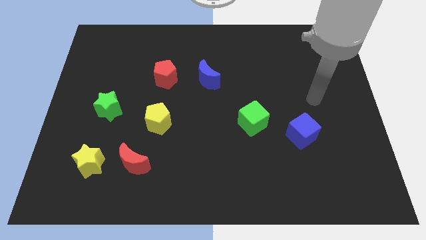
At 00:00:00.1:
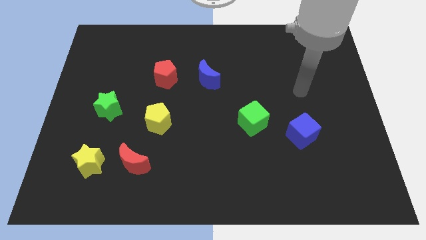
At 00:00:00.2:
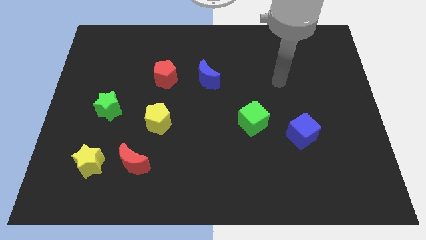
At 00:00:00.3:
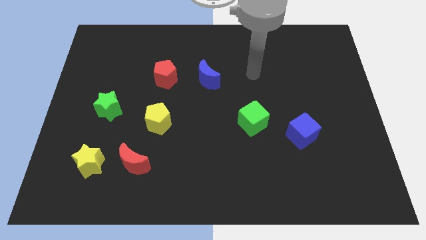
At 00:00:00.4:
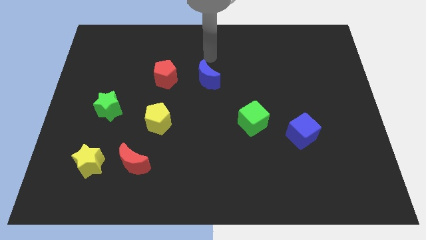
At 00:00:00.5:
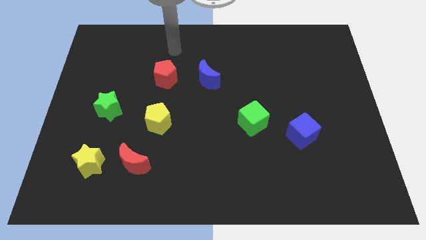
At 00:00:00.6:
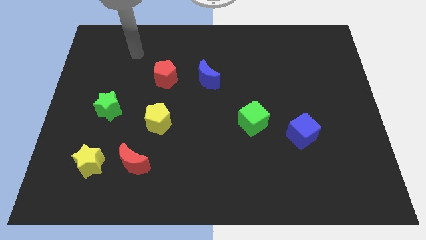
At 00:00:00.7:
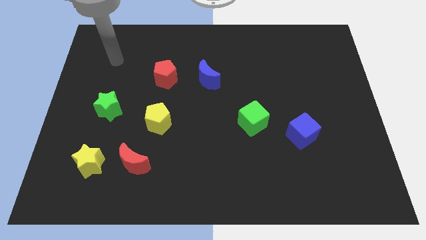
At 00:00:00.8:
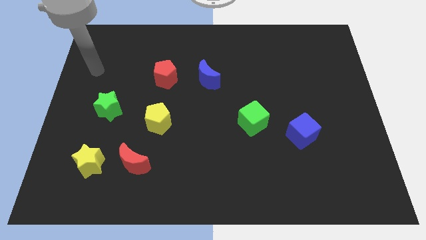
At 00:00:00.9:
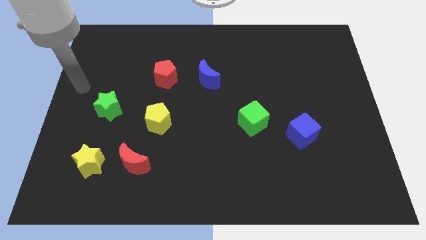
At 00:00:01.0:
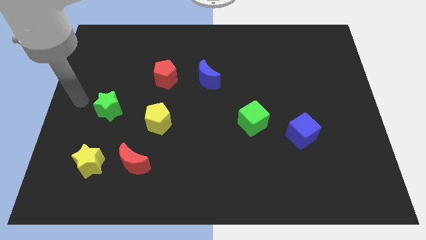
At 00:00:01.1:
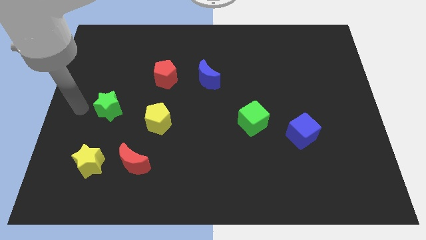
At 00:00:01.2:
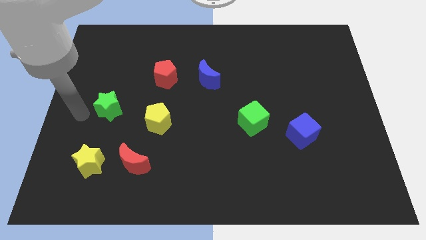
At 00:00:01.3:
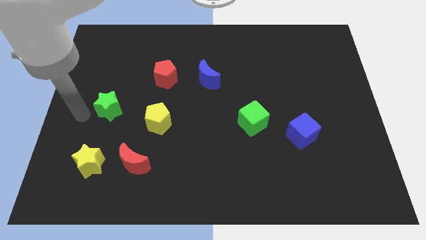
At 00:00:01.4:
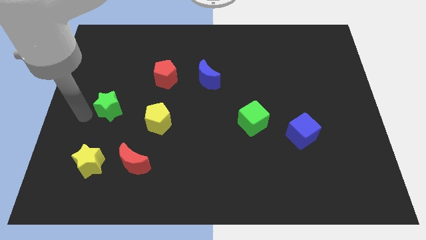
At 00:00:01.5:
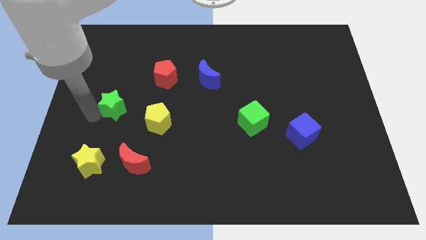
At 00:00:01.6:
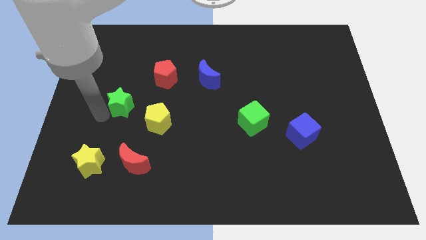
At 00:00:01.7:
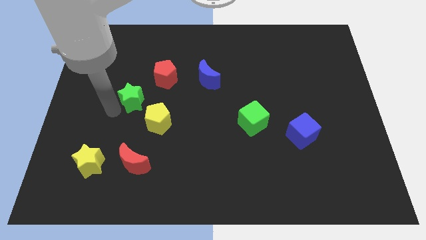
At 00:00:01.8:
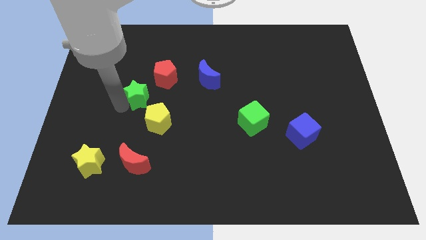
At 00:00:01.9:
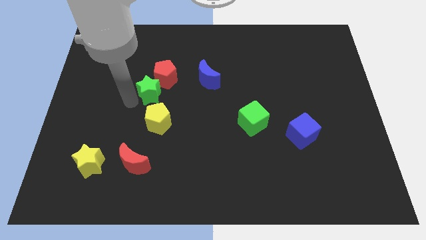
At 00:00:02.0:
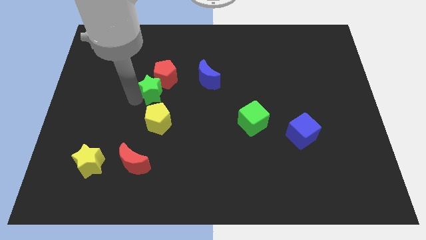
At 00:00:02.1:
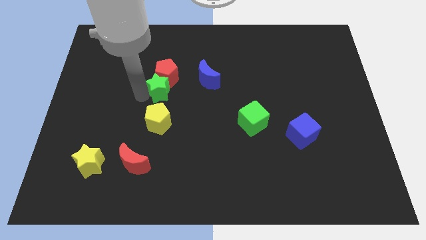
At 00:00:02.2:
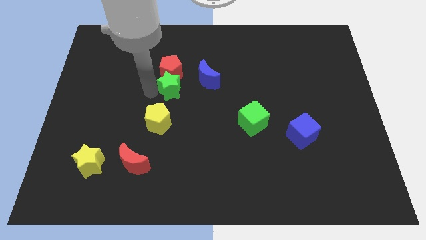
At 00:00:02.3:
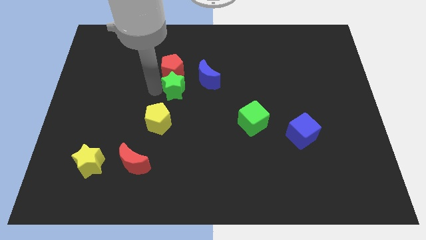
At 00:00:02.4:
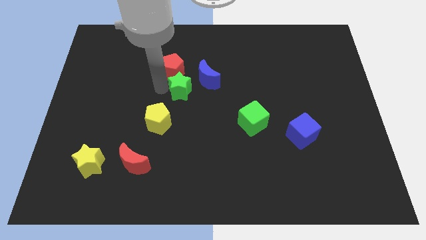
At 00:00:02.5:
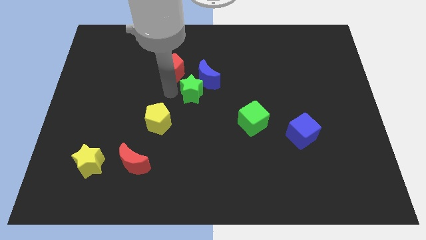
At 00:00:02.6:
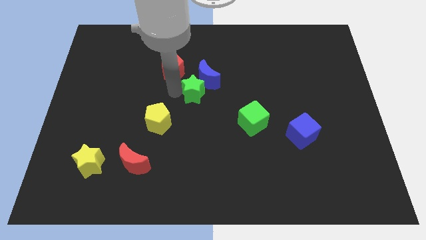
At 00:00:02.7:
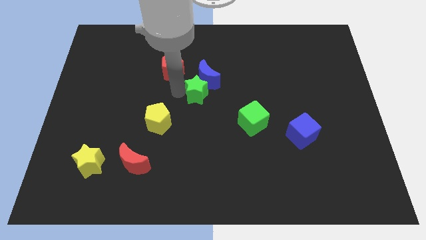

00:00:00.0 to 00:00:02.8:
slide the green star towards the blue moon

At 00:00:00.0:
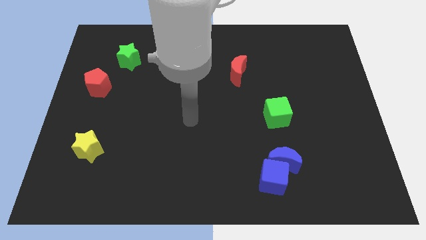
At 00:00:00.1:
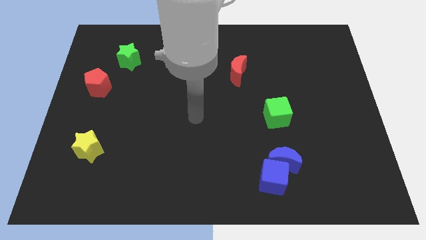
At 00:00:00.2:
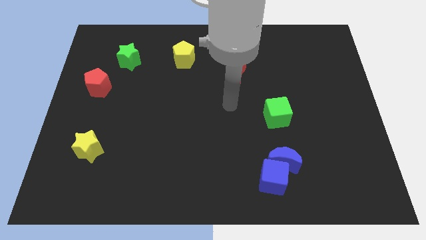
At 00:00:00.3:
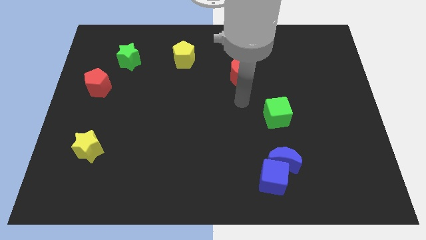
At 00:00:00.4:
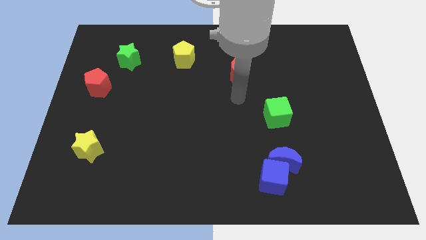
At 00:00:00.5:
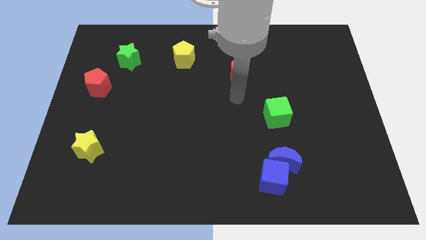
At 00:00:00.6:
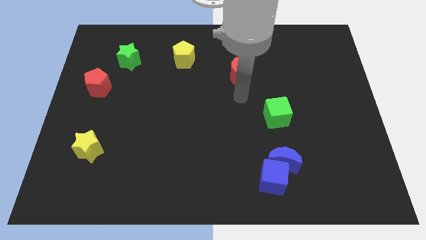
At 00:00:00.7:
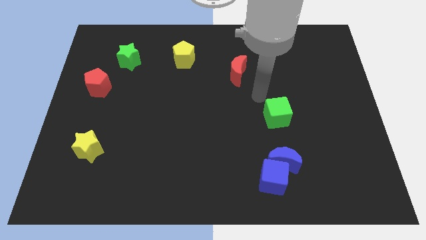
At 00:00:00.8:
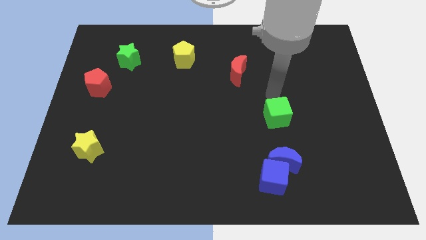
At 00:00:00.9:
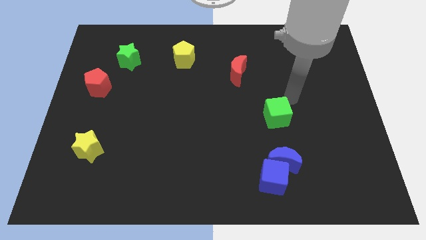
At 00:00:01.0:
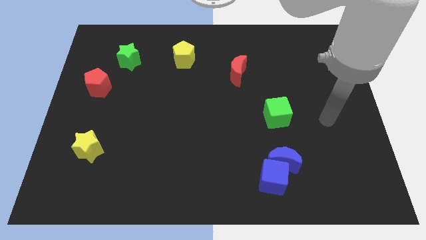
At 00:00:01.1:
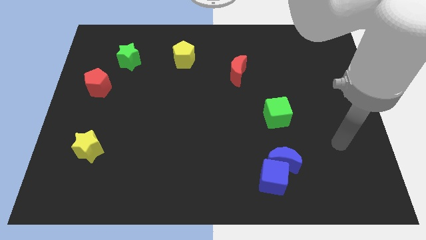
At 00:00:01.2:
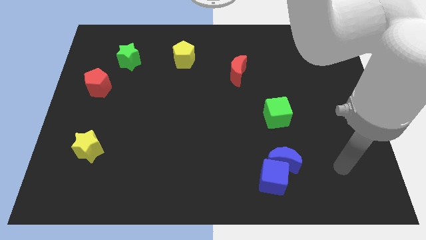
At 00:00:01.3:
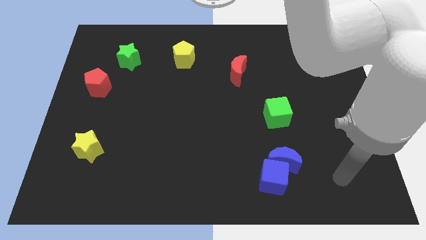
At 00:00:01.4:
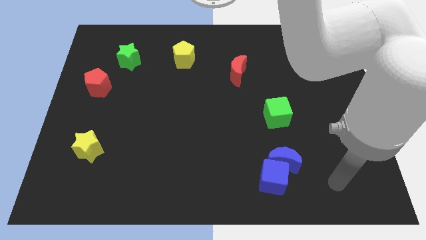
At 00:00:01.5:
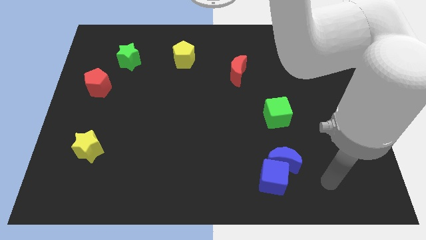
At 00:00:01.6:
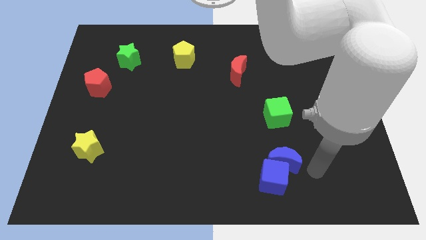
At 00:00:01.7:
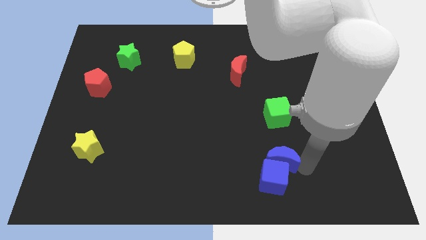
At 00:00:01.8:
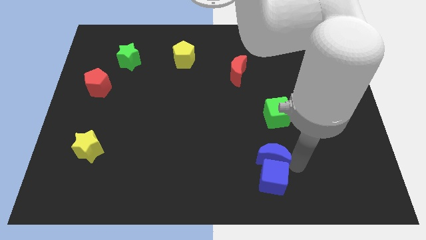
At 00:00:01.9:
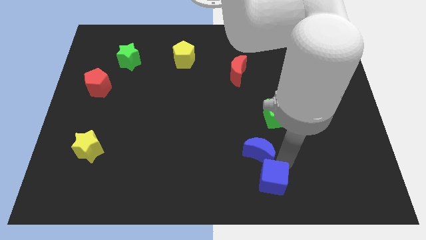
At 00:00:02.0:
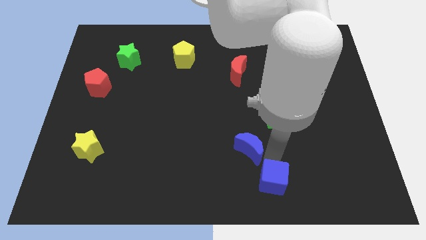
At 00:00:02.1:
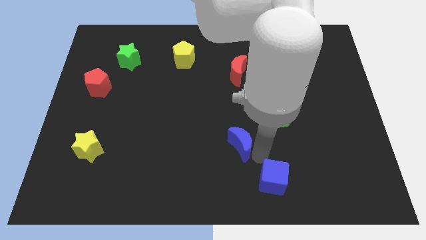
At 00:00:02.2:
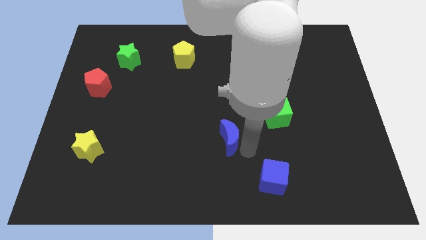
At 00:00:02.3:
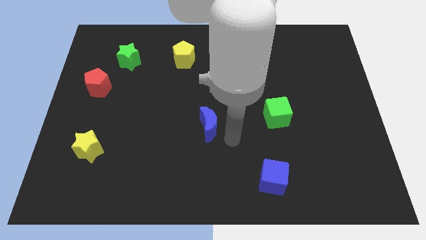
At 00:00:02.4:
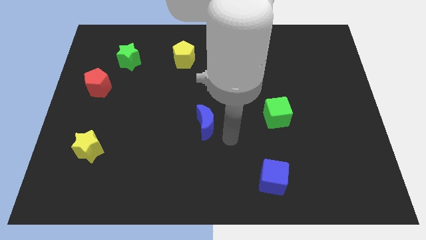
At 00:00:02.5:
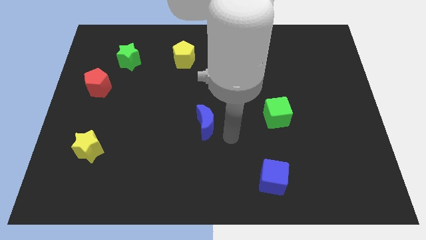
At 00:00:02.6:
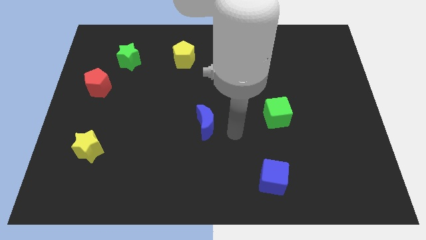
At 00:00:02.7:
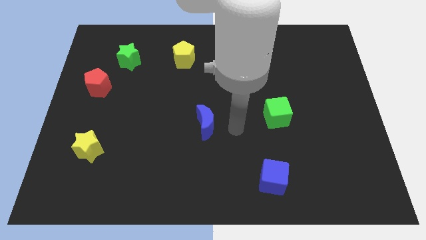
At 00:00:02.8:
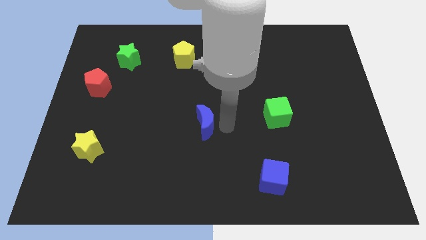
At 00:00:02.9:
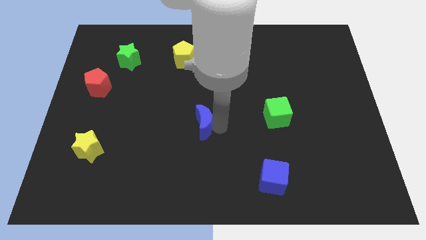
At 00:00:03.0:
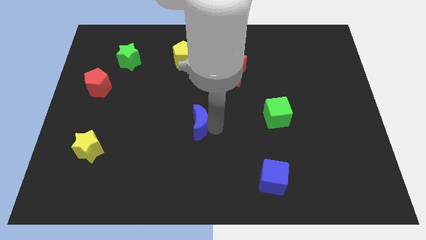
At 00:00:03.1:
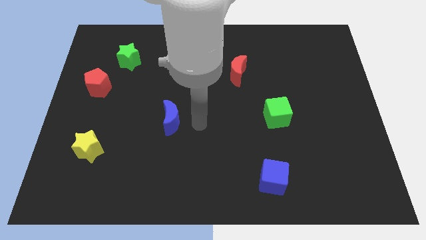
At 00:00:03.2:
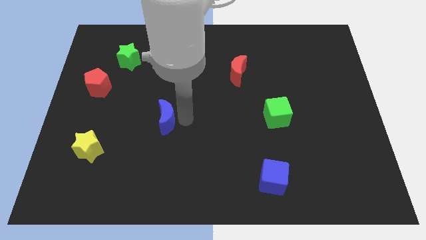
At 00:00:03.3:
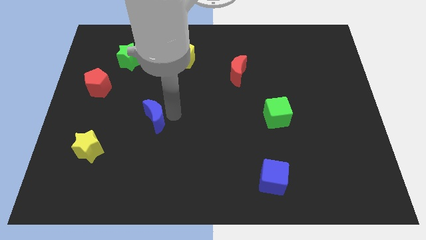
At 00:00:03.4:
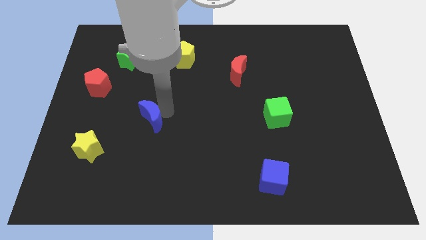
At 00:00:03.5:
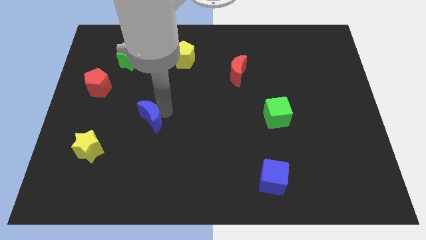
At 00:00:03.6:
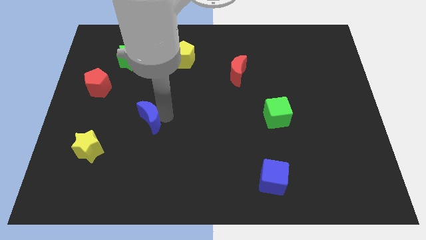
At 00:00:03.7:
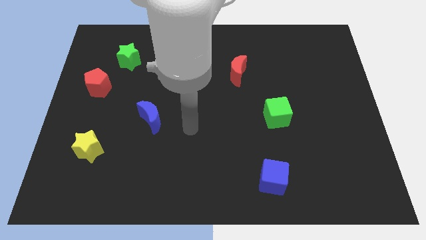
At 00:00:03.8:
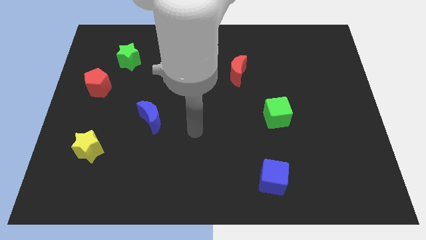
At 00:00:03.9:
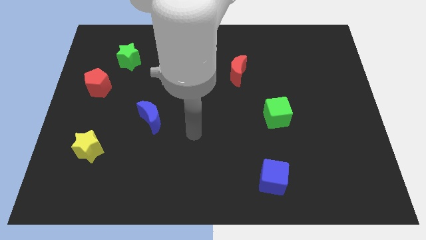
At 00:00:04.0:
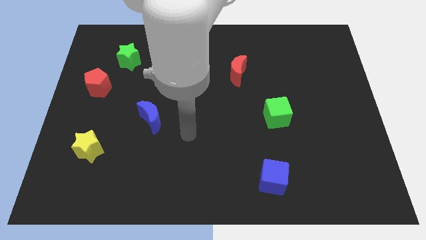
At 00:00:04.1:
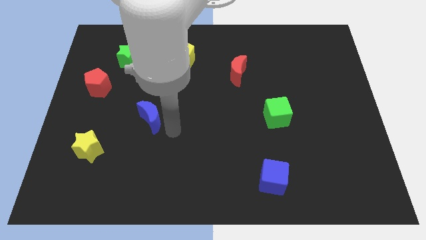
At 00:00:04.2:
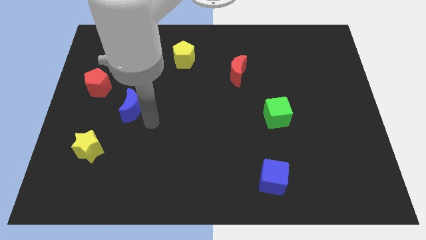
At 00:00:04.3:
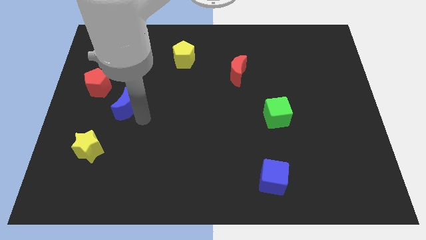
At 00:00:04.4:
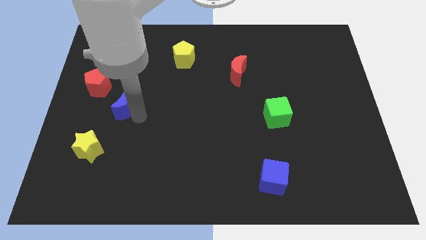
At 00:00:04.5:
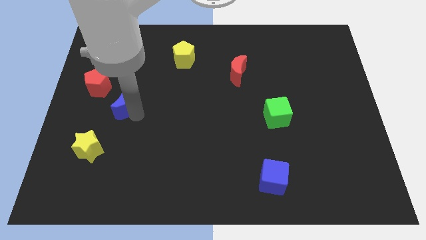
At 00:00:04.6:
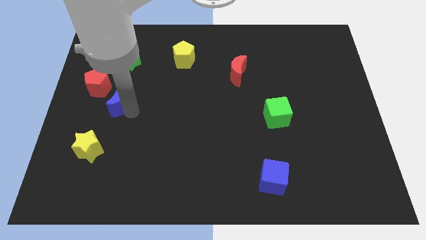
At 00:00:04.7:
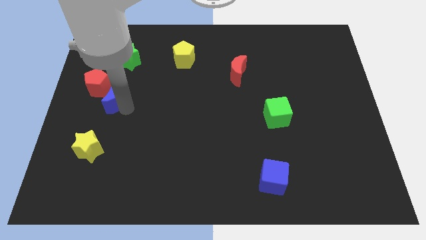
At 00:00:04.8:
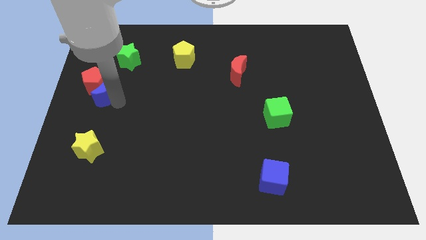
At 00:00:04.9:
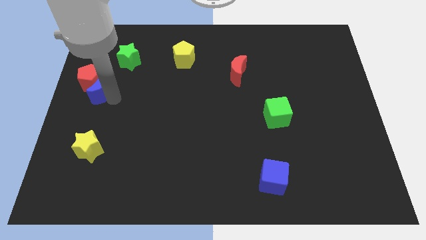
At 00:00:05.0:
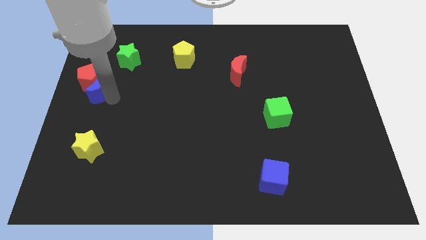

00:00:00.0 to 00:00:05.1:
push the blue moon close to the red pentagon

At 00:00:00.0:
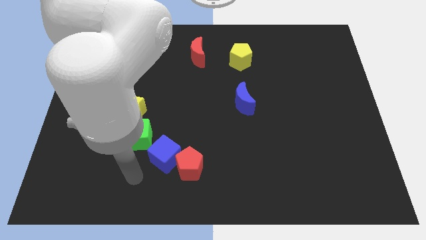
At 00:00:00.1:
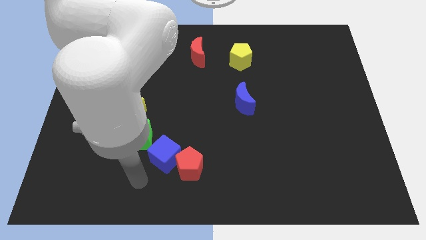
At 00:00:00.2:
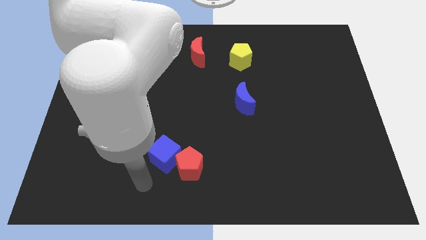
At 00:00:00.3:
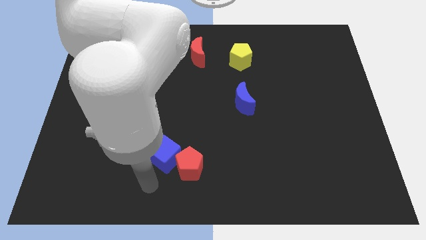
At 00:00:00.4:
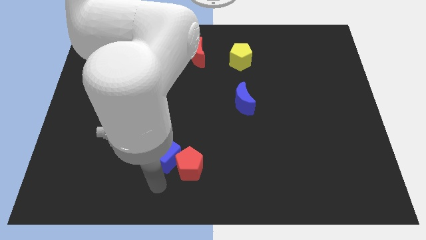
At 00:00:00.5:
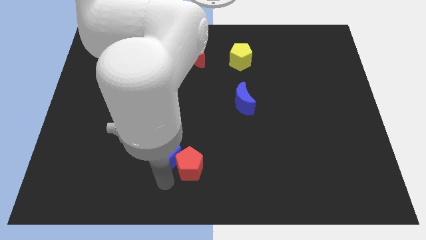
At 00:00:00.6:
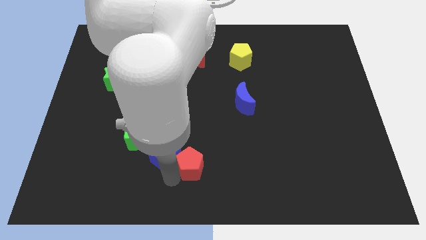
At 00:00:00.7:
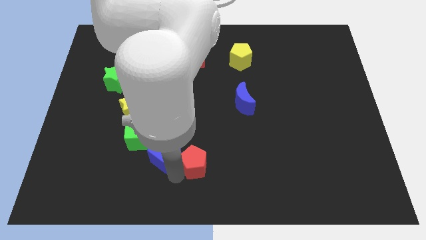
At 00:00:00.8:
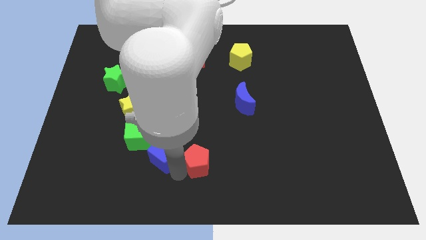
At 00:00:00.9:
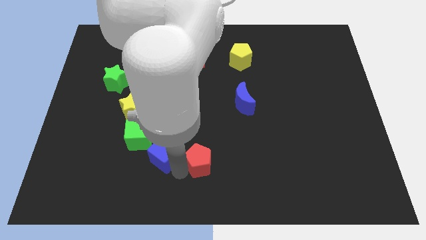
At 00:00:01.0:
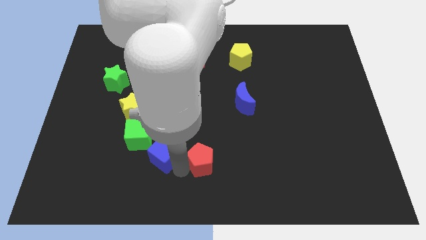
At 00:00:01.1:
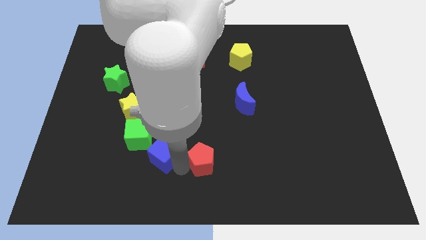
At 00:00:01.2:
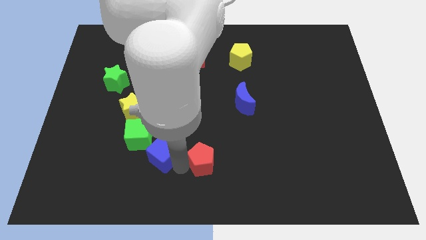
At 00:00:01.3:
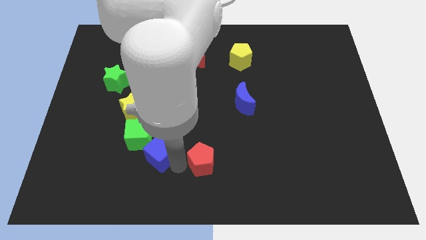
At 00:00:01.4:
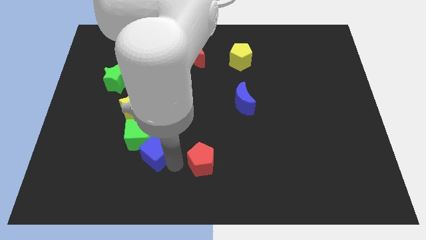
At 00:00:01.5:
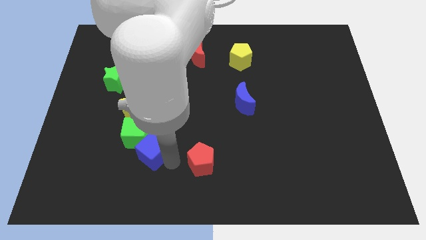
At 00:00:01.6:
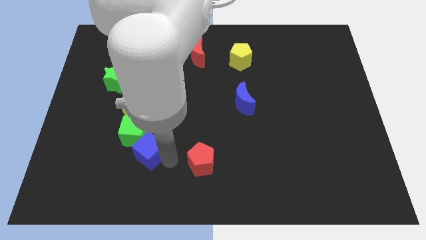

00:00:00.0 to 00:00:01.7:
slide the blue cube towards the green cube
